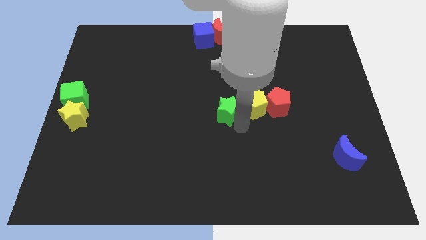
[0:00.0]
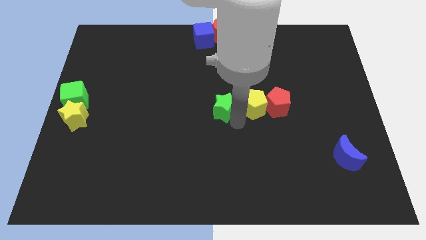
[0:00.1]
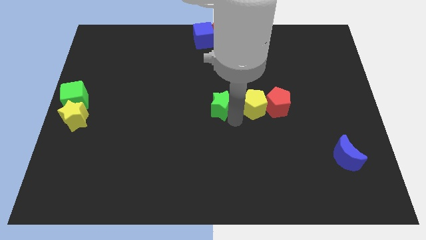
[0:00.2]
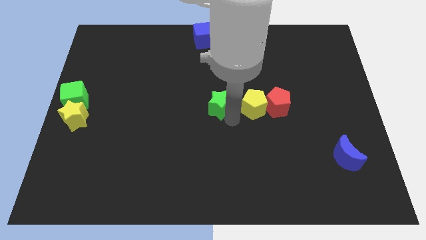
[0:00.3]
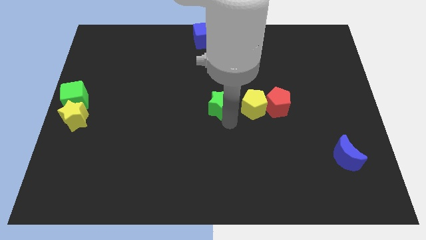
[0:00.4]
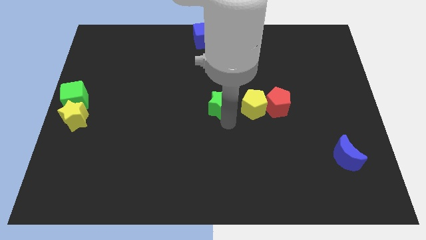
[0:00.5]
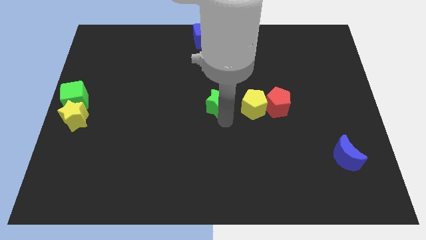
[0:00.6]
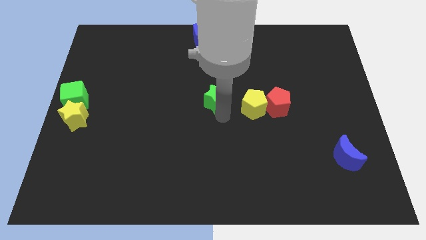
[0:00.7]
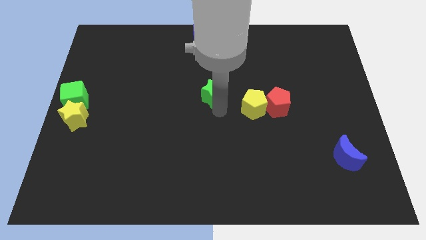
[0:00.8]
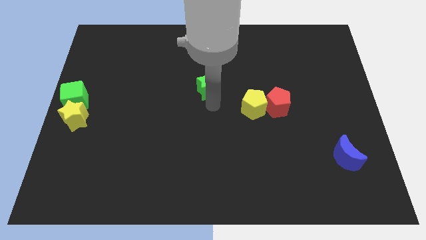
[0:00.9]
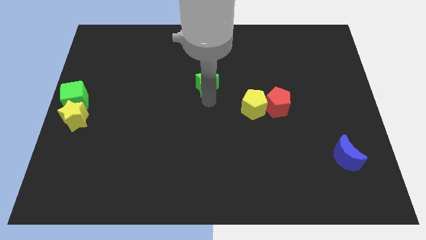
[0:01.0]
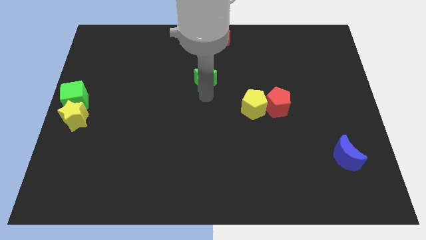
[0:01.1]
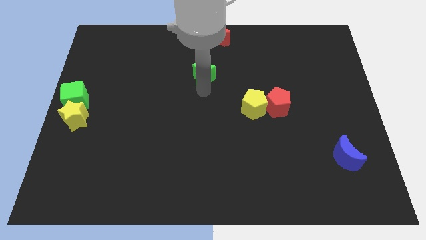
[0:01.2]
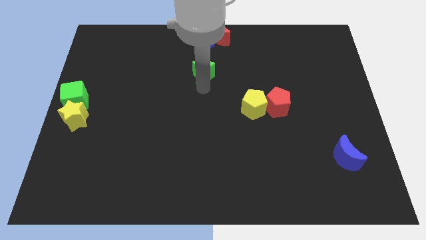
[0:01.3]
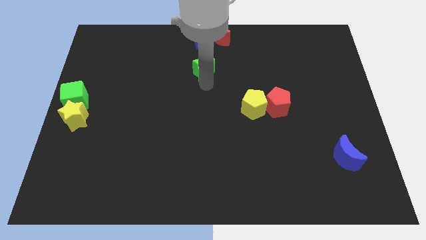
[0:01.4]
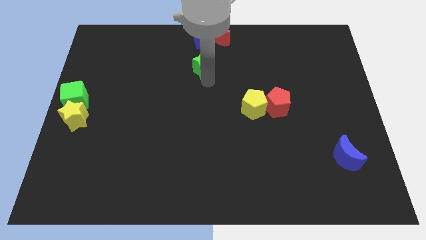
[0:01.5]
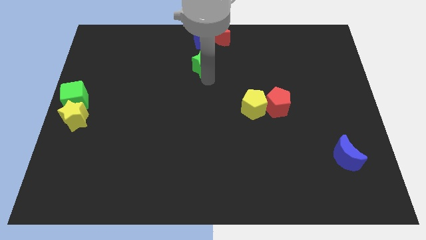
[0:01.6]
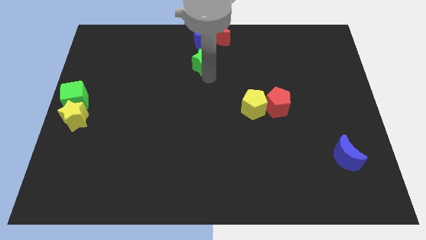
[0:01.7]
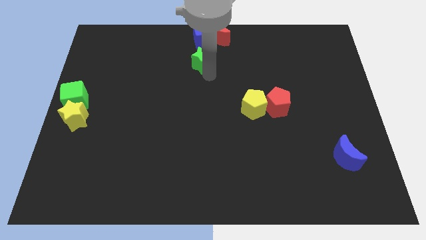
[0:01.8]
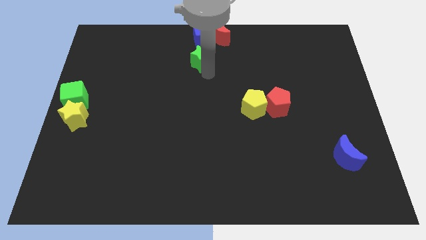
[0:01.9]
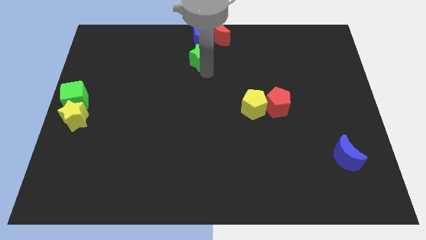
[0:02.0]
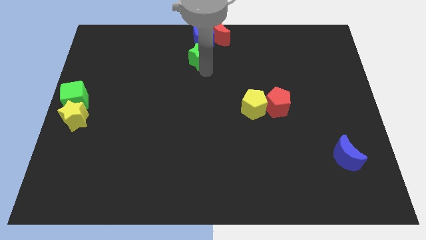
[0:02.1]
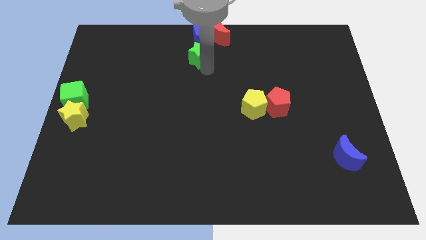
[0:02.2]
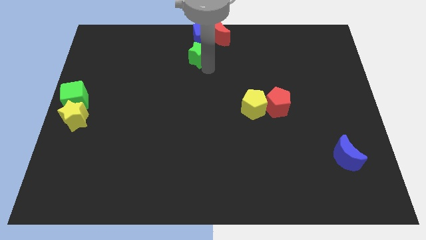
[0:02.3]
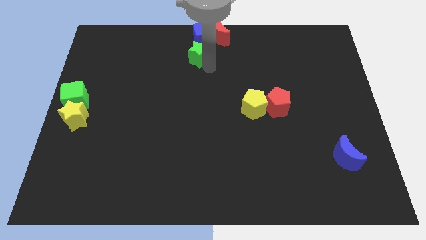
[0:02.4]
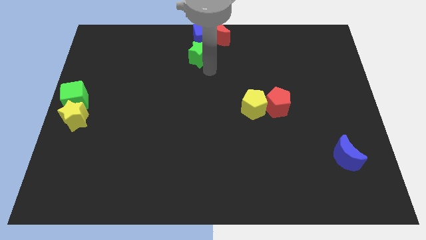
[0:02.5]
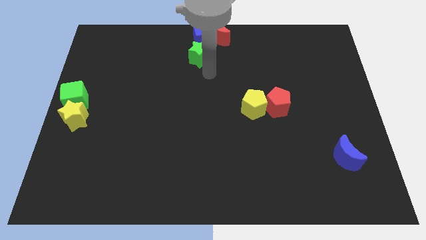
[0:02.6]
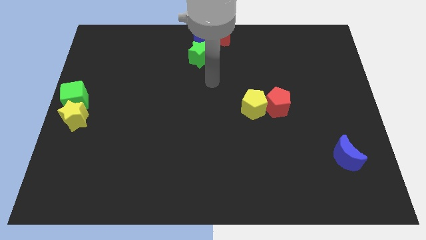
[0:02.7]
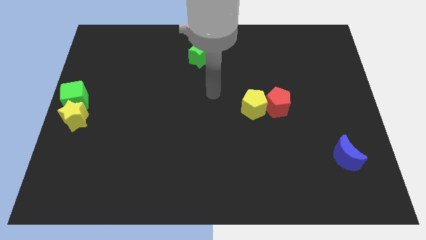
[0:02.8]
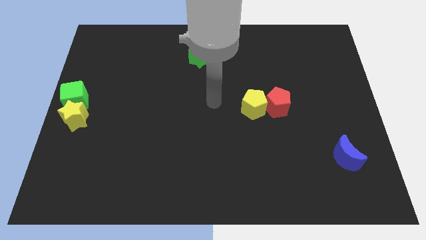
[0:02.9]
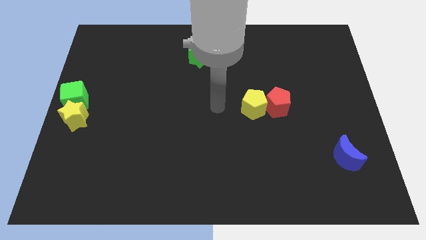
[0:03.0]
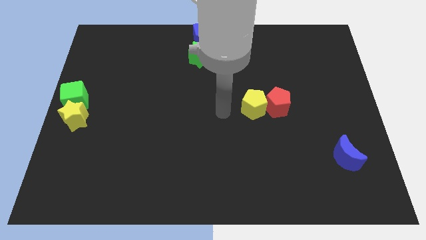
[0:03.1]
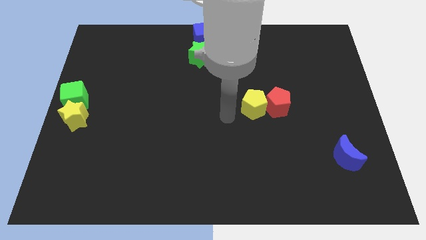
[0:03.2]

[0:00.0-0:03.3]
push the green star vertically below the blue cube

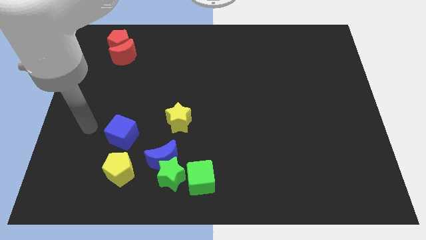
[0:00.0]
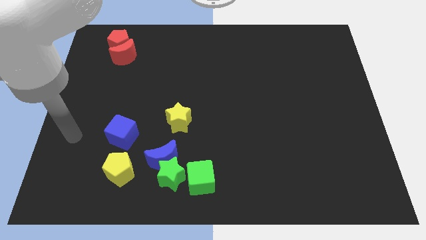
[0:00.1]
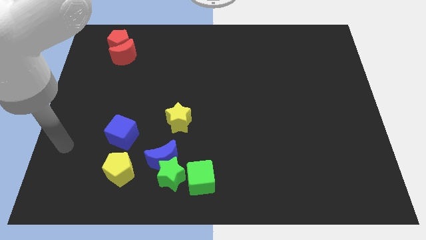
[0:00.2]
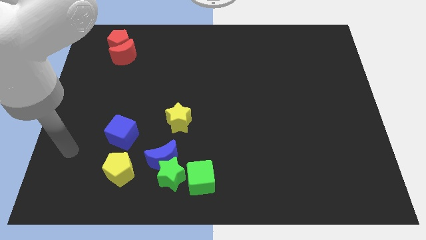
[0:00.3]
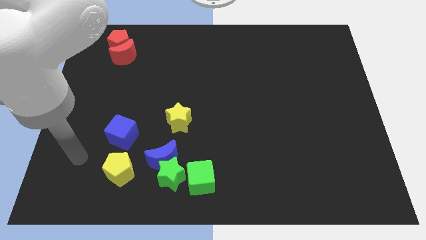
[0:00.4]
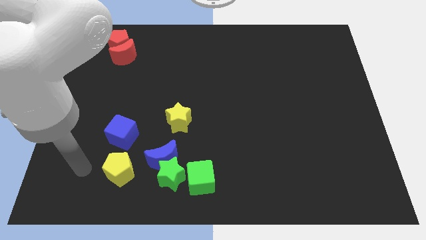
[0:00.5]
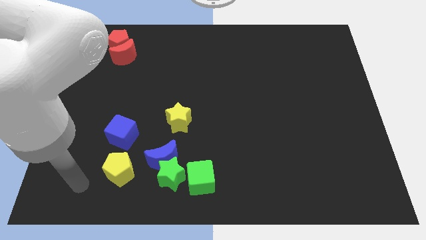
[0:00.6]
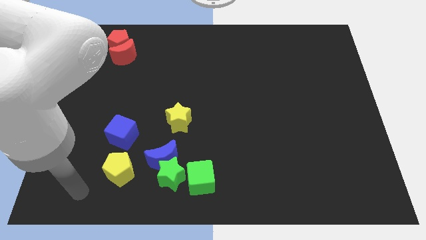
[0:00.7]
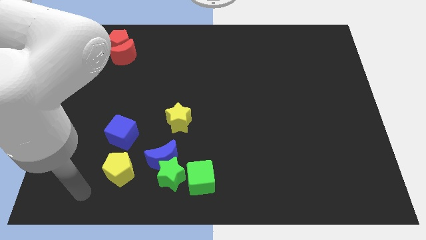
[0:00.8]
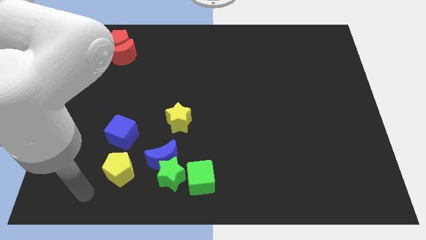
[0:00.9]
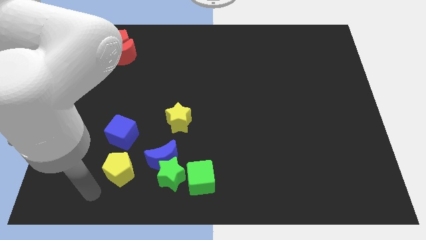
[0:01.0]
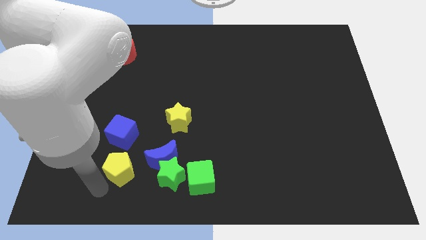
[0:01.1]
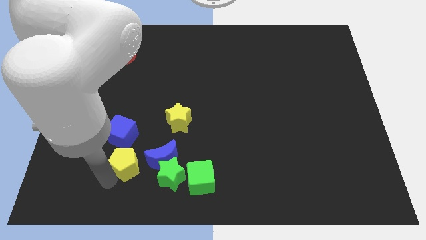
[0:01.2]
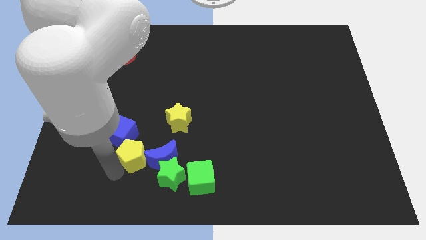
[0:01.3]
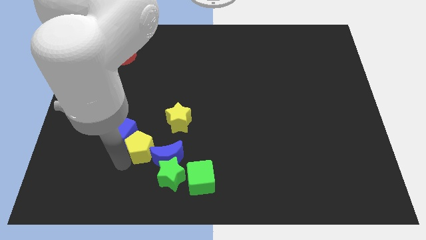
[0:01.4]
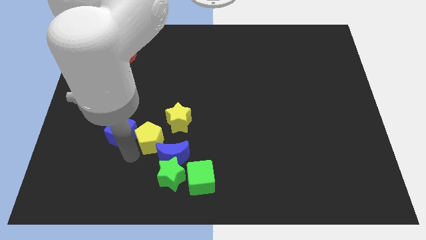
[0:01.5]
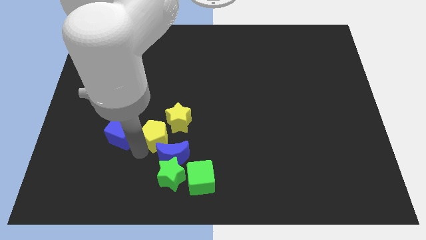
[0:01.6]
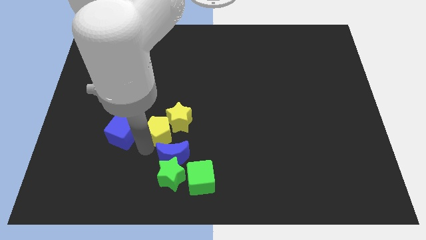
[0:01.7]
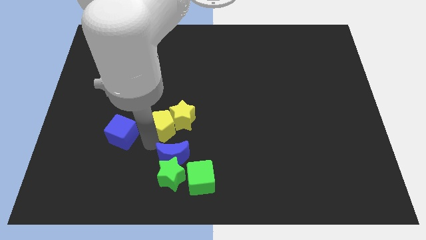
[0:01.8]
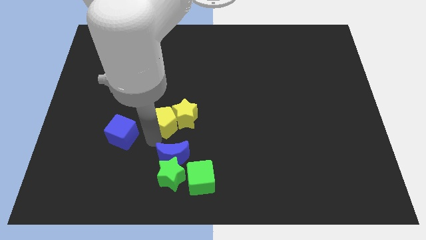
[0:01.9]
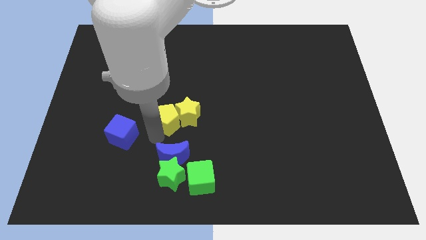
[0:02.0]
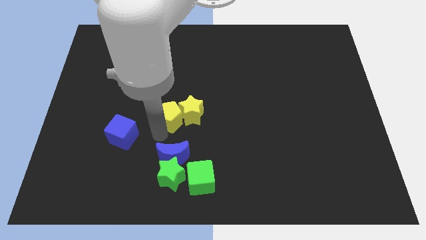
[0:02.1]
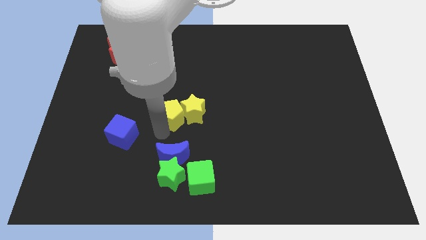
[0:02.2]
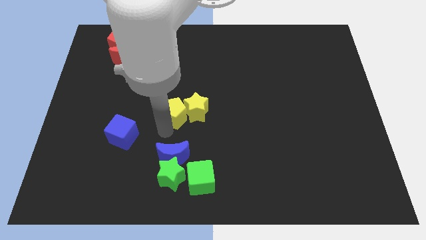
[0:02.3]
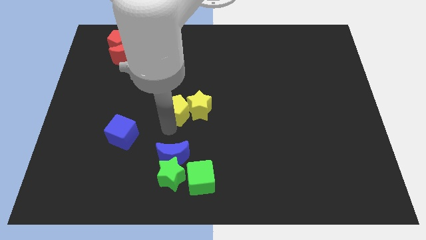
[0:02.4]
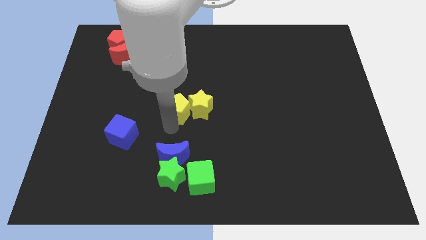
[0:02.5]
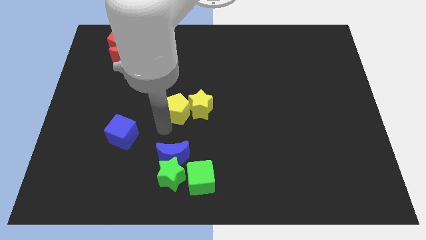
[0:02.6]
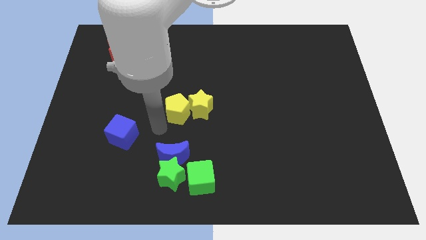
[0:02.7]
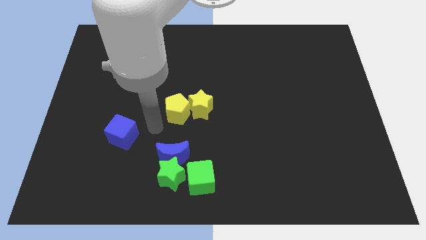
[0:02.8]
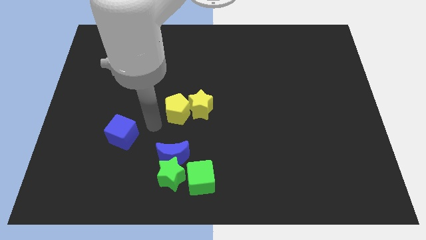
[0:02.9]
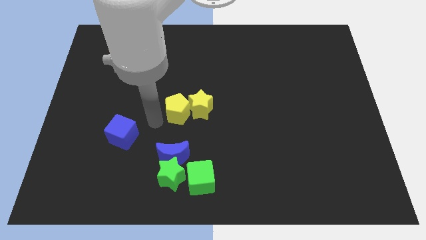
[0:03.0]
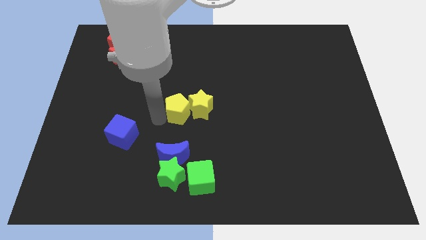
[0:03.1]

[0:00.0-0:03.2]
push yellow pentagon into yellow star

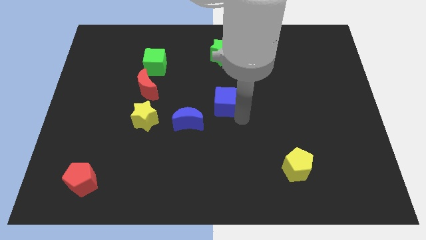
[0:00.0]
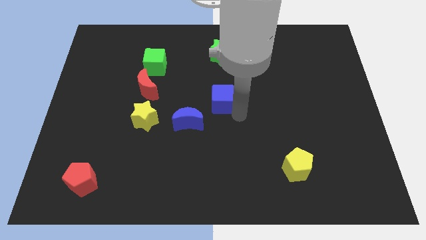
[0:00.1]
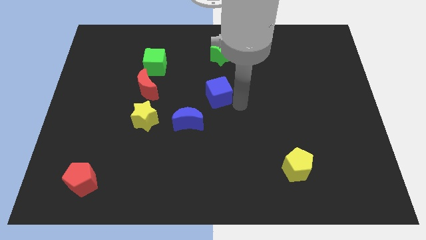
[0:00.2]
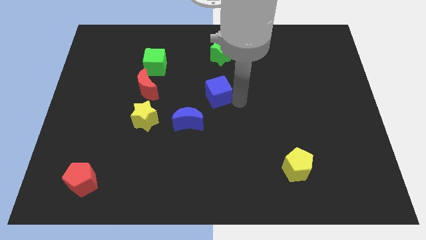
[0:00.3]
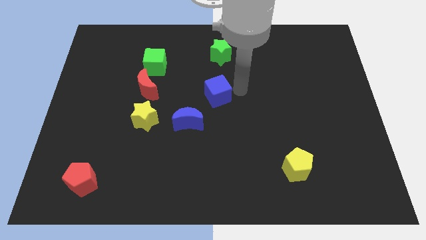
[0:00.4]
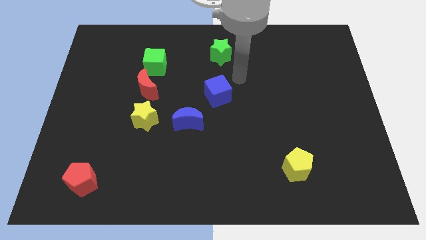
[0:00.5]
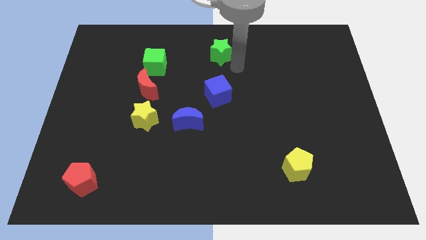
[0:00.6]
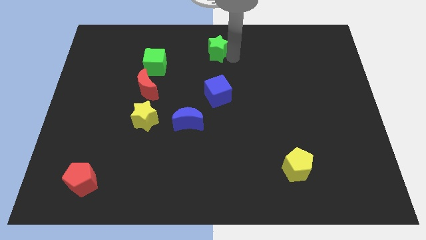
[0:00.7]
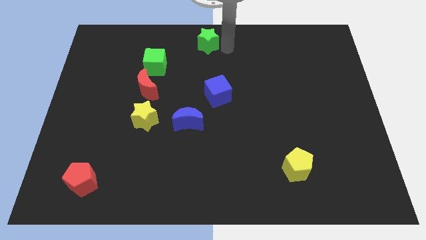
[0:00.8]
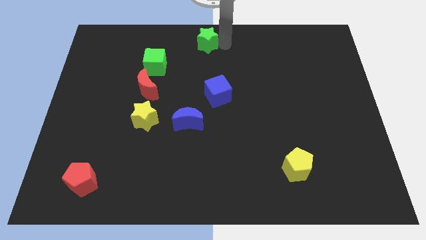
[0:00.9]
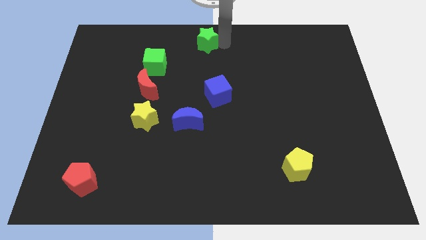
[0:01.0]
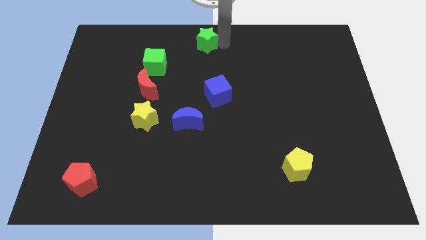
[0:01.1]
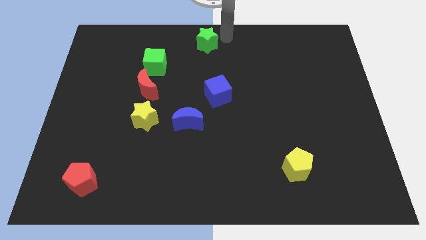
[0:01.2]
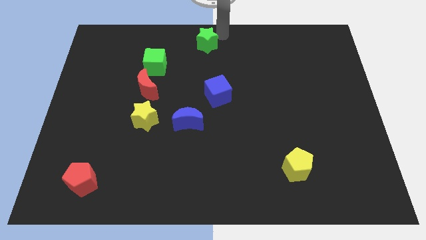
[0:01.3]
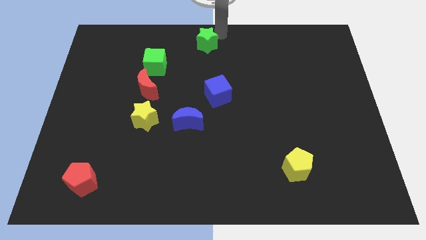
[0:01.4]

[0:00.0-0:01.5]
move blue cube slightly upwards of the board

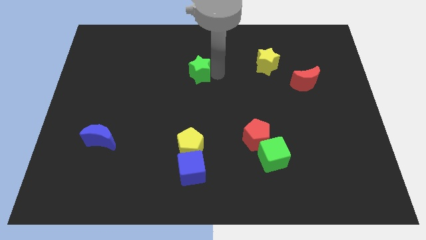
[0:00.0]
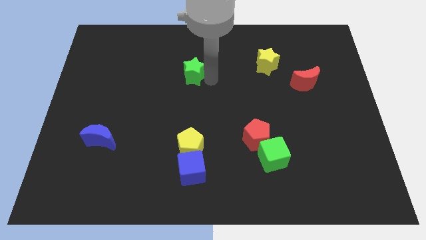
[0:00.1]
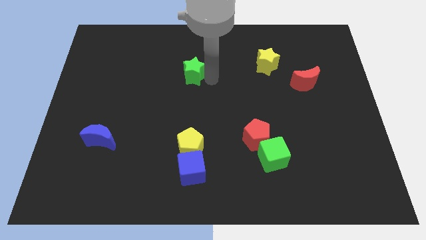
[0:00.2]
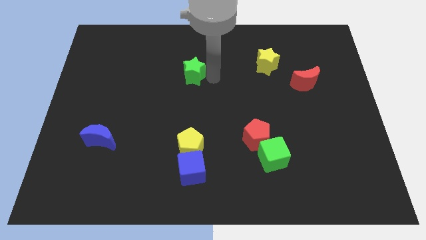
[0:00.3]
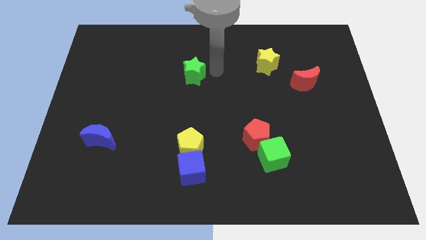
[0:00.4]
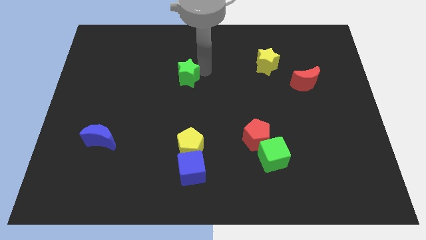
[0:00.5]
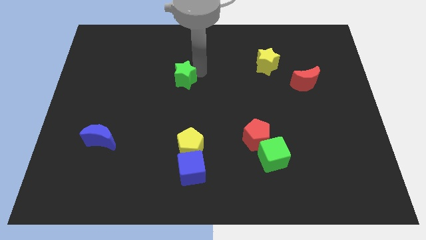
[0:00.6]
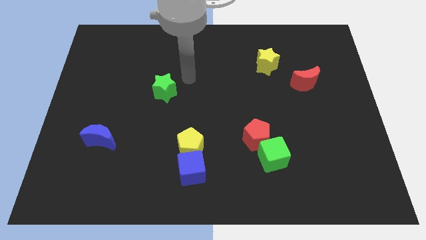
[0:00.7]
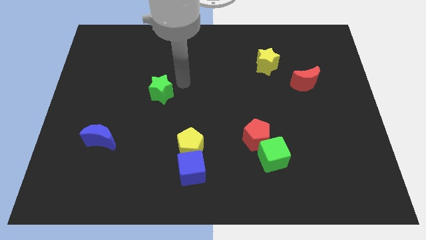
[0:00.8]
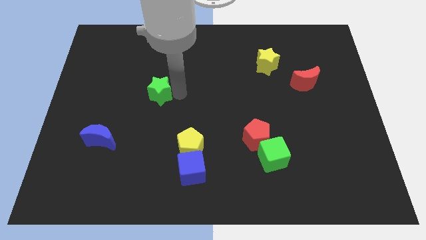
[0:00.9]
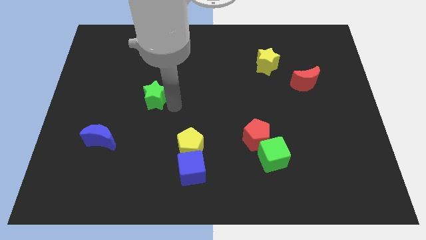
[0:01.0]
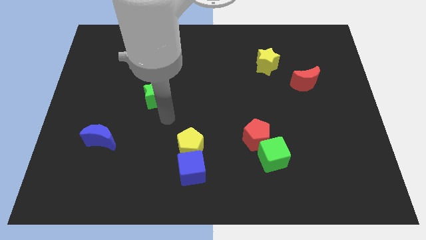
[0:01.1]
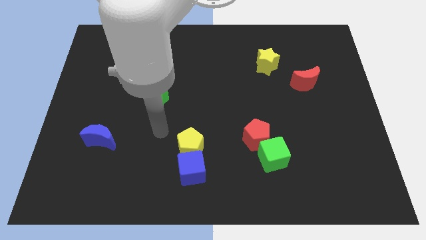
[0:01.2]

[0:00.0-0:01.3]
push the green star towards the blue crescent
